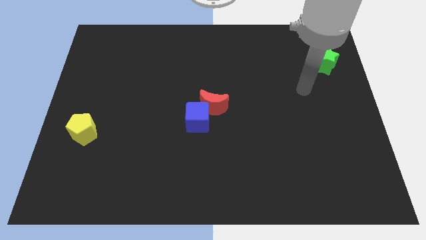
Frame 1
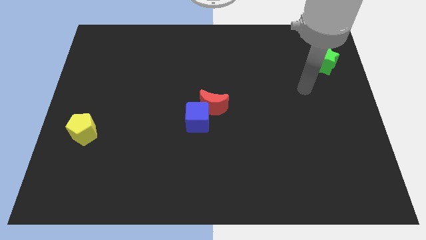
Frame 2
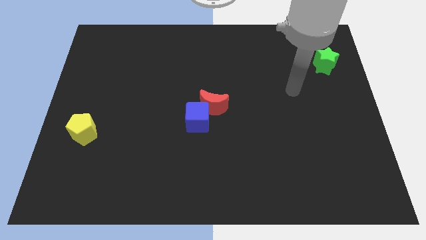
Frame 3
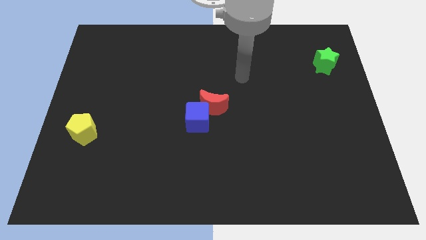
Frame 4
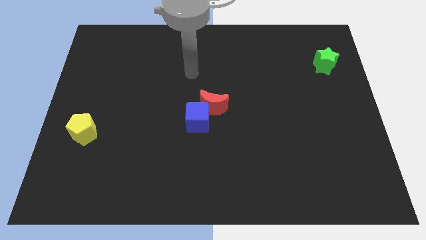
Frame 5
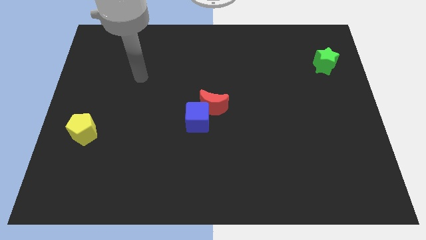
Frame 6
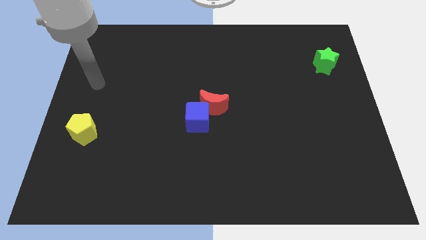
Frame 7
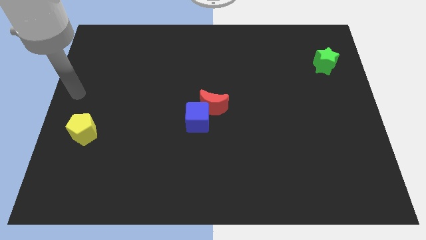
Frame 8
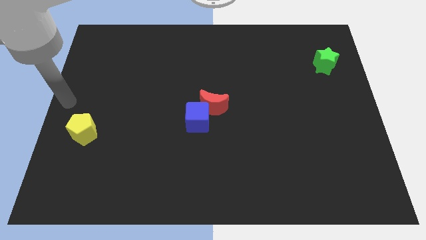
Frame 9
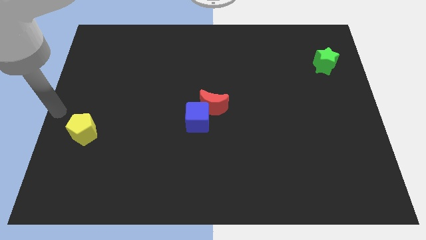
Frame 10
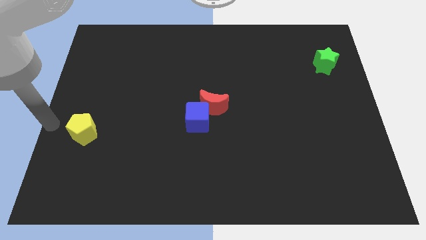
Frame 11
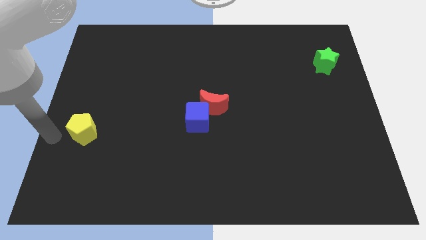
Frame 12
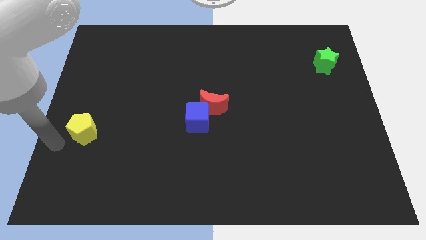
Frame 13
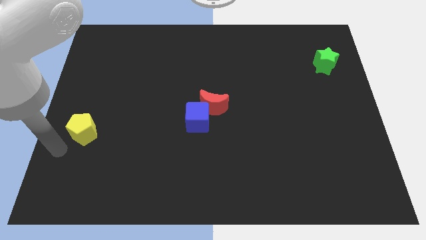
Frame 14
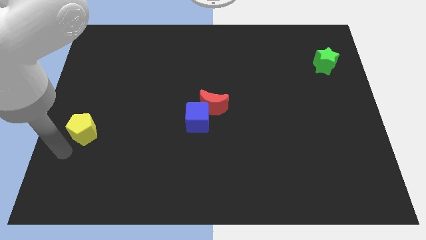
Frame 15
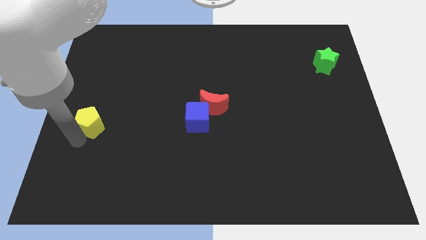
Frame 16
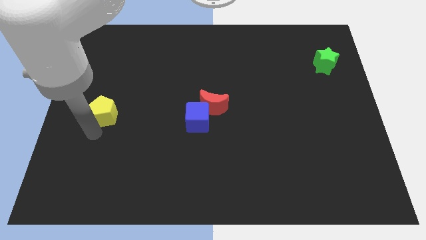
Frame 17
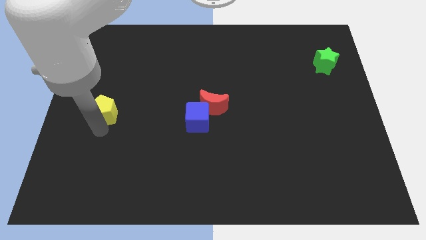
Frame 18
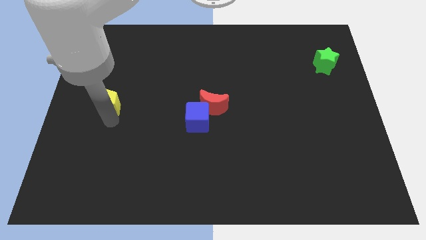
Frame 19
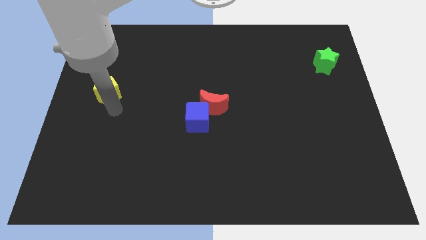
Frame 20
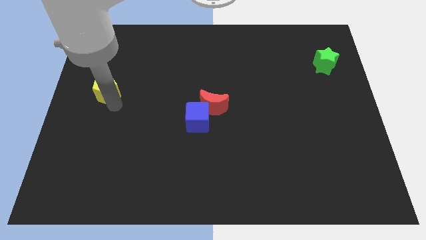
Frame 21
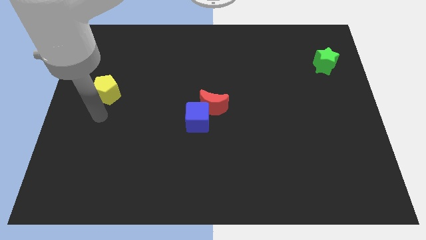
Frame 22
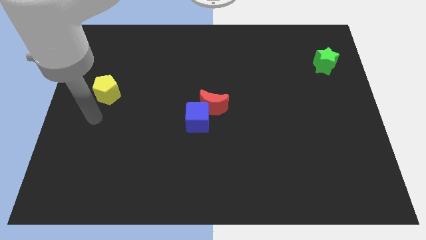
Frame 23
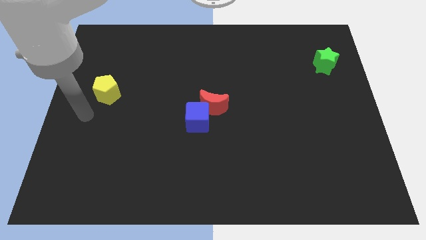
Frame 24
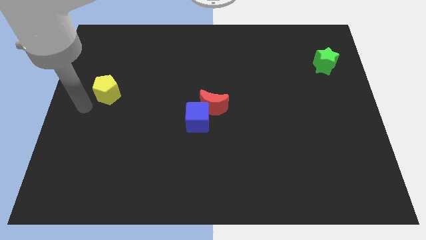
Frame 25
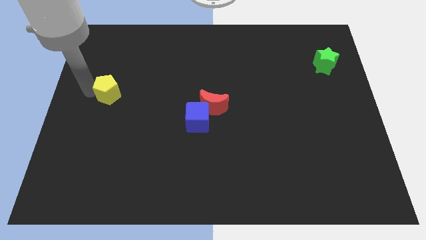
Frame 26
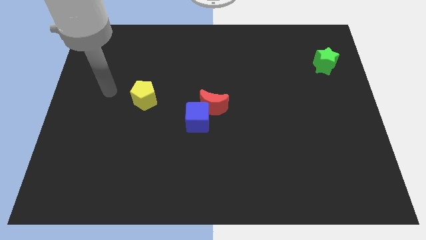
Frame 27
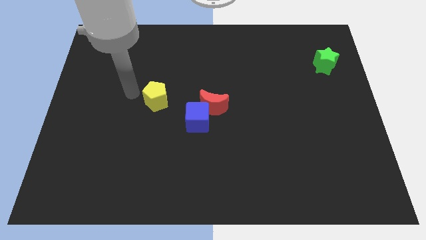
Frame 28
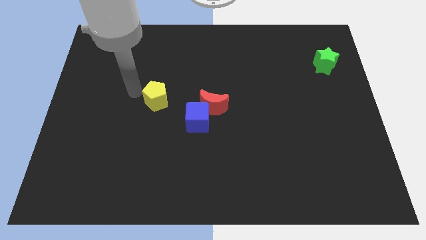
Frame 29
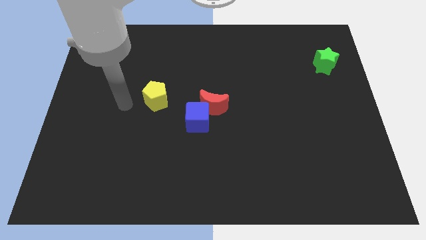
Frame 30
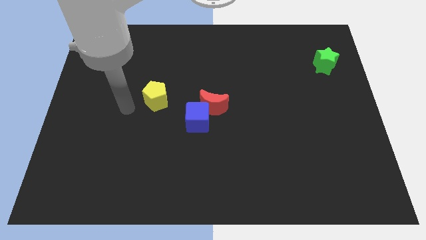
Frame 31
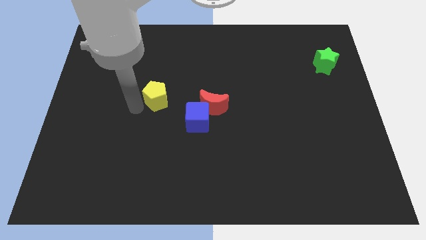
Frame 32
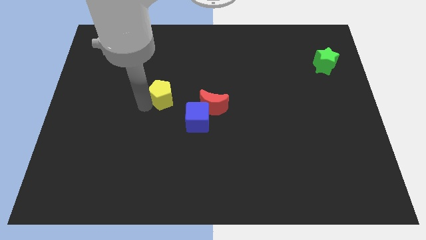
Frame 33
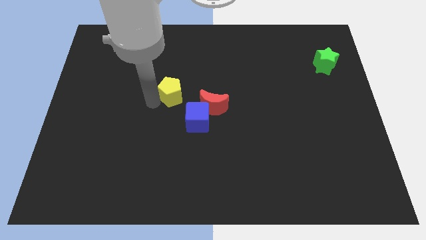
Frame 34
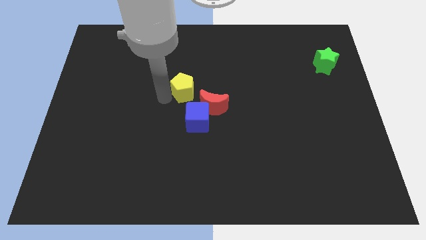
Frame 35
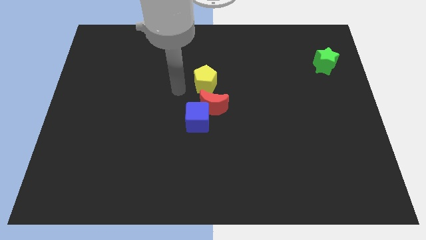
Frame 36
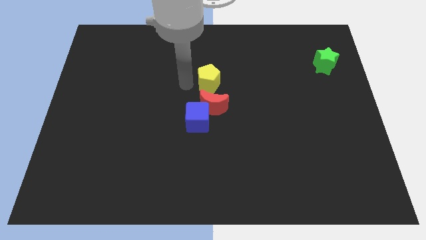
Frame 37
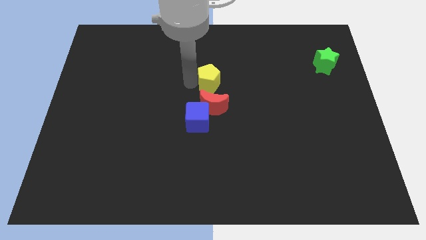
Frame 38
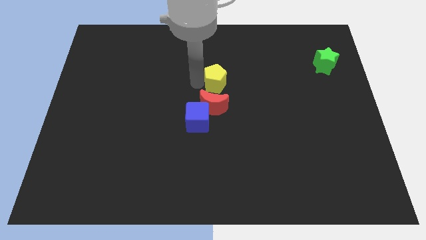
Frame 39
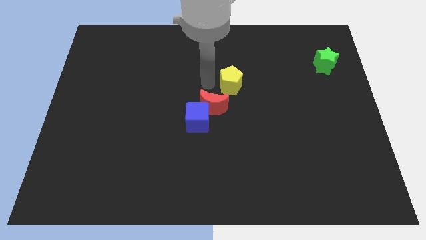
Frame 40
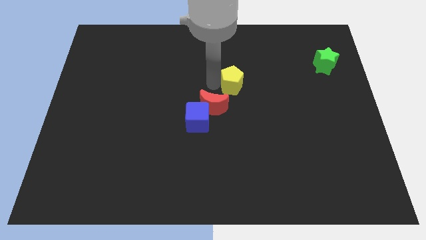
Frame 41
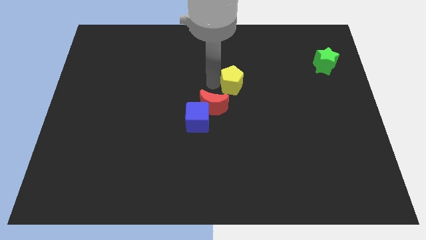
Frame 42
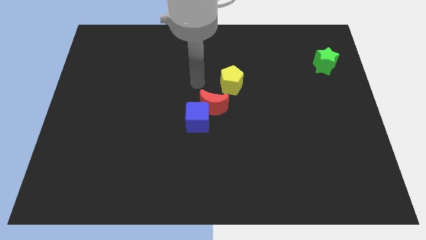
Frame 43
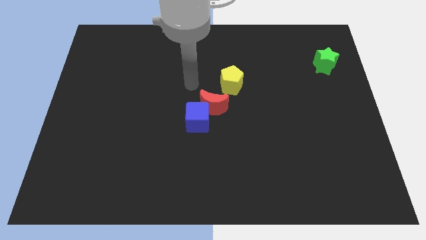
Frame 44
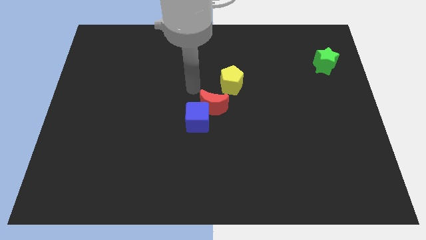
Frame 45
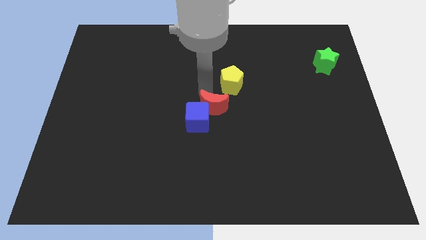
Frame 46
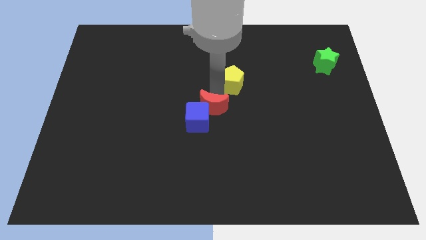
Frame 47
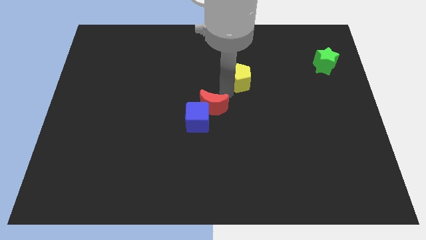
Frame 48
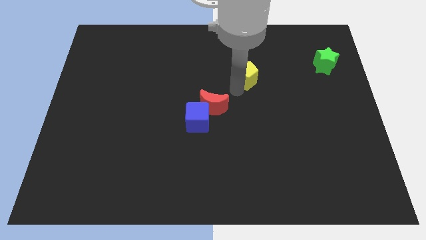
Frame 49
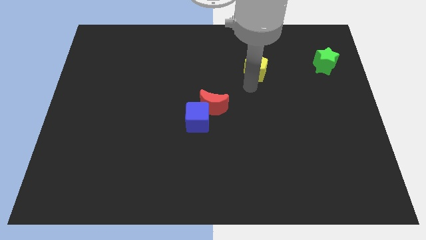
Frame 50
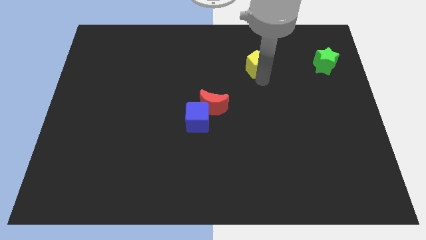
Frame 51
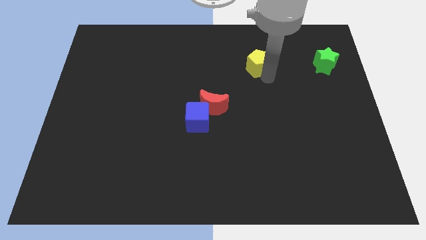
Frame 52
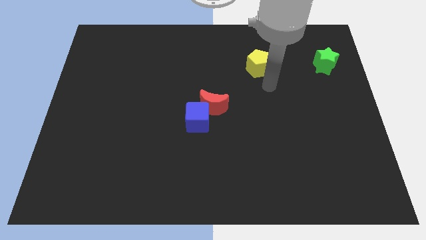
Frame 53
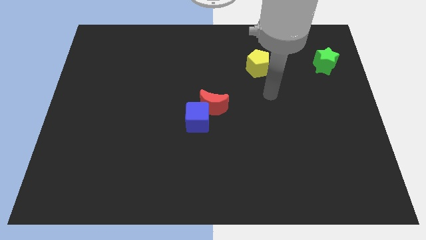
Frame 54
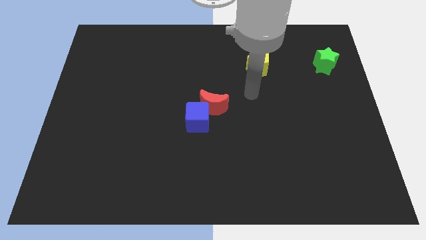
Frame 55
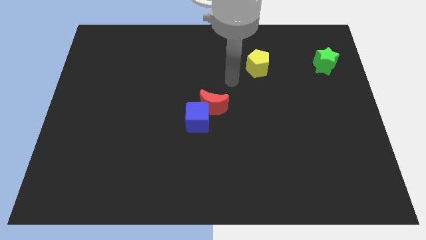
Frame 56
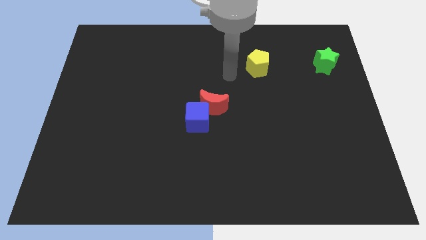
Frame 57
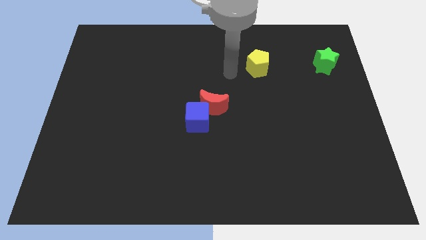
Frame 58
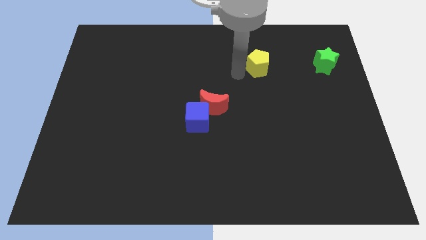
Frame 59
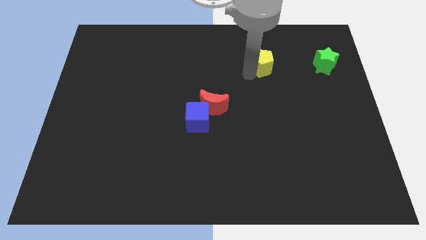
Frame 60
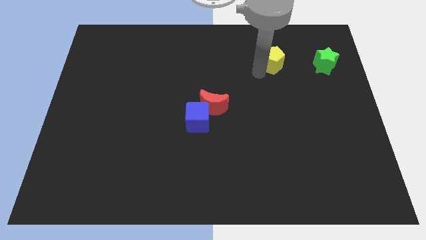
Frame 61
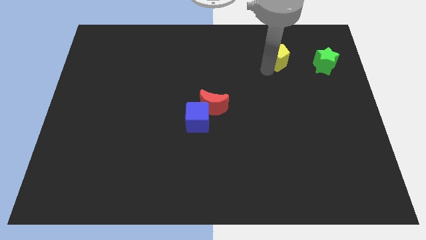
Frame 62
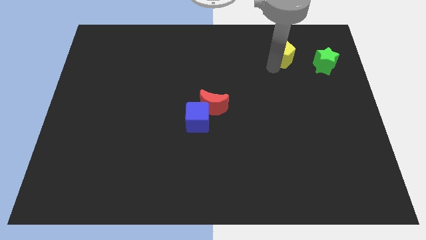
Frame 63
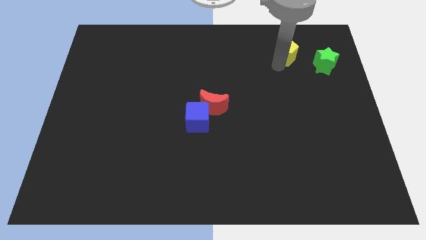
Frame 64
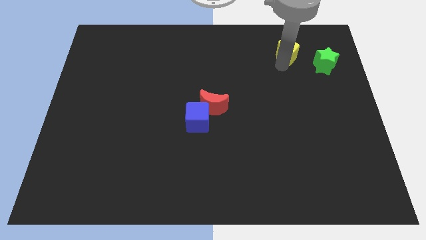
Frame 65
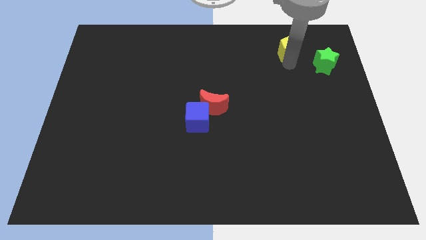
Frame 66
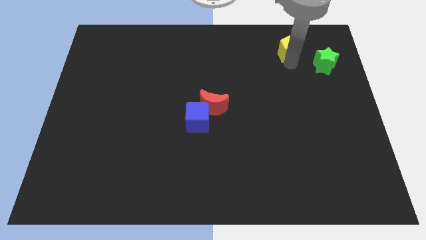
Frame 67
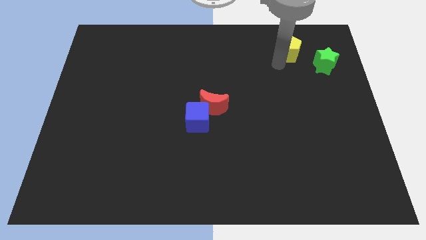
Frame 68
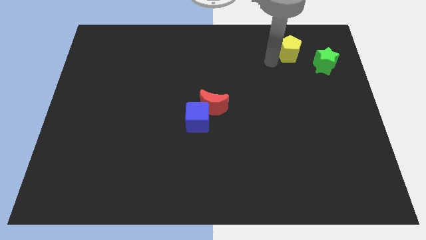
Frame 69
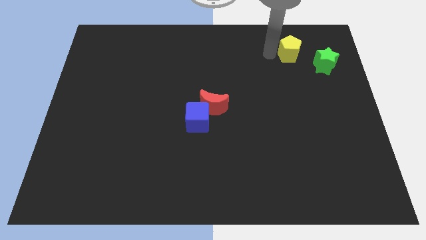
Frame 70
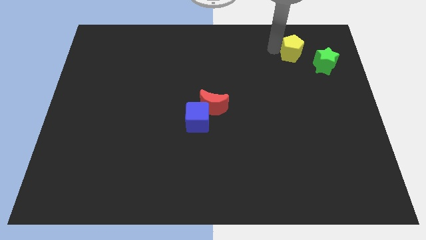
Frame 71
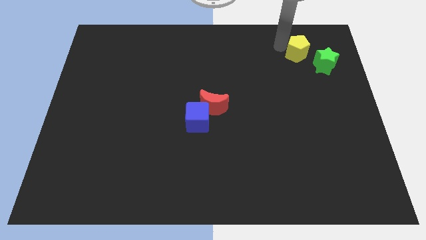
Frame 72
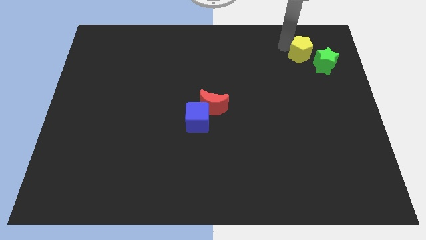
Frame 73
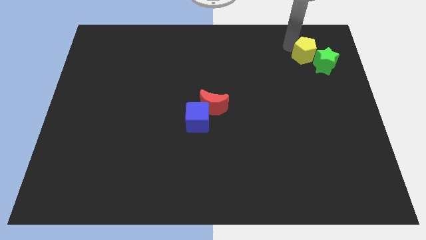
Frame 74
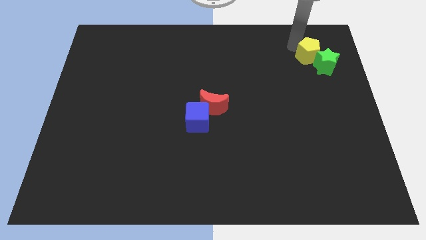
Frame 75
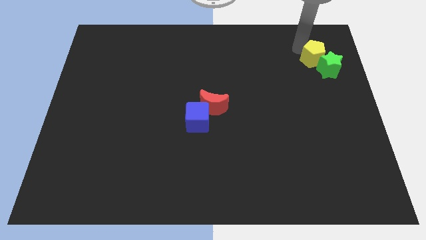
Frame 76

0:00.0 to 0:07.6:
push the yellow pentagon to the green star

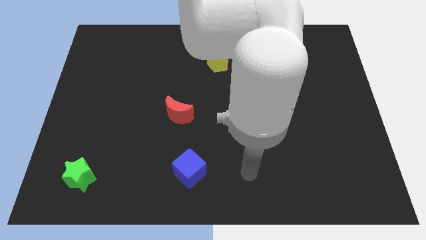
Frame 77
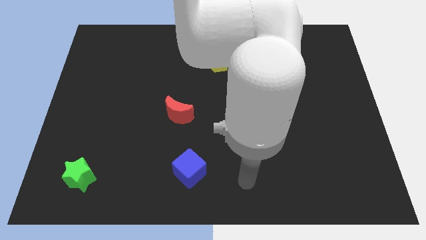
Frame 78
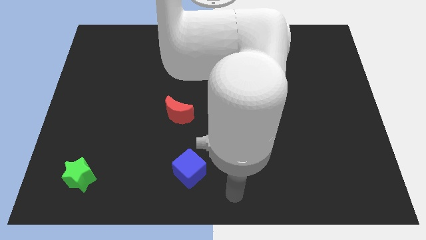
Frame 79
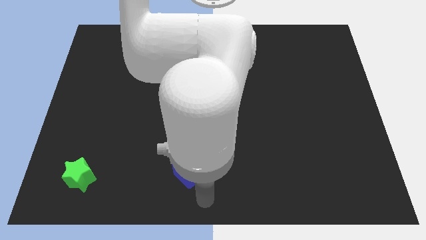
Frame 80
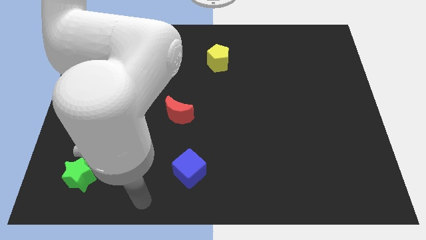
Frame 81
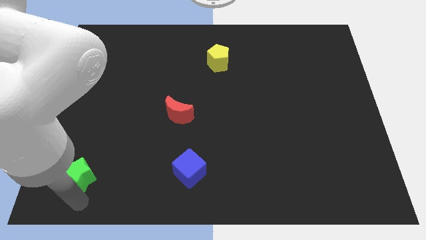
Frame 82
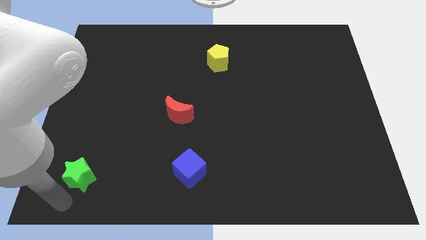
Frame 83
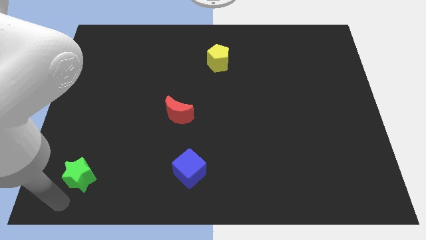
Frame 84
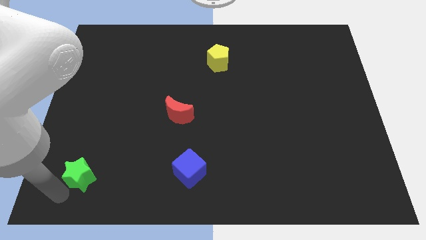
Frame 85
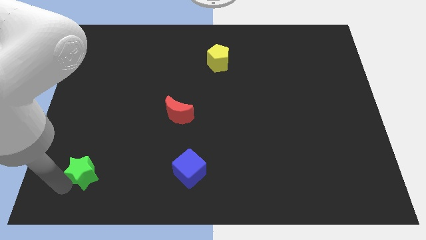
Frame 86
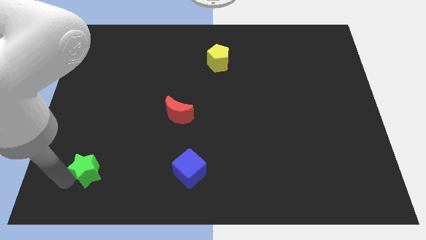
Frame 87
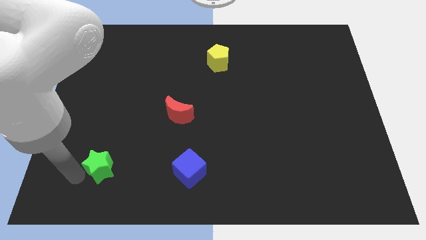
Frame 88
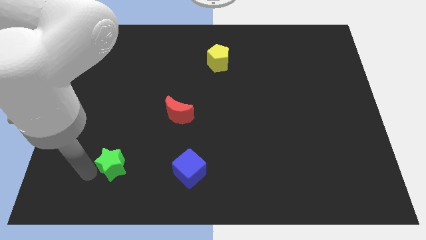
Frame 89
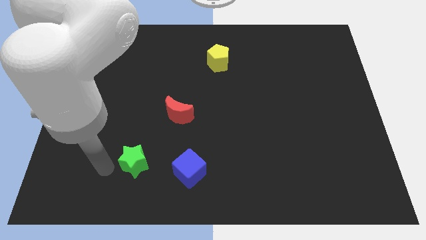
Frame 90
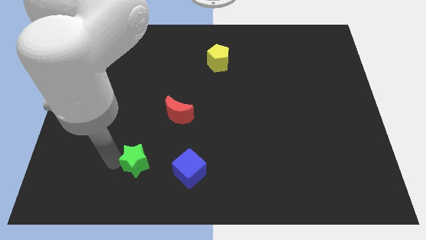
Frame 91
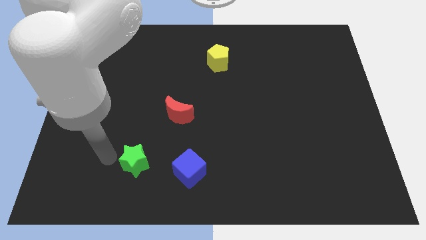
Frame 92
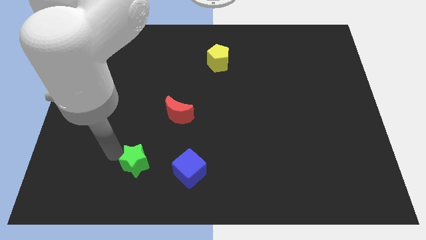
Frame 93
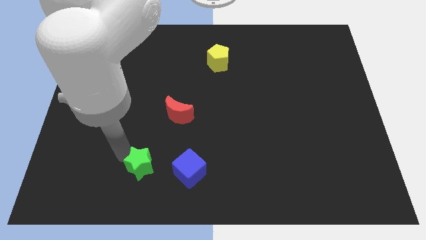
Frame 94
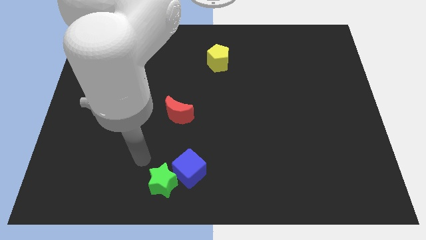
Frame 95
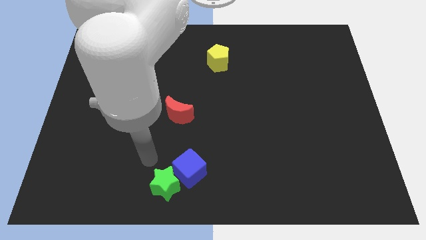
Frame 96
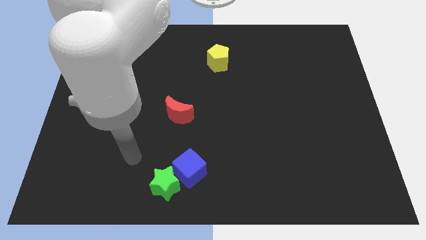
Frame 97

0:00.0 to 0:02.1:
slide the star to the blue block
